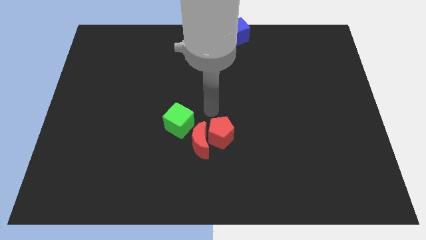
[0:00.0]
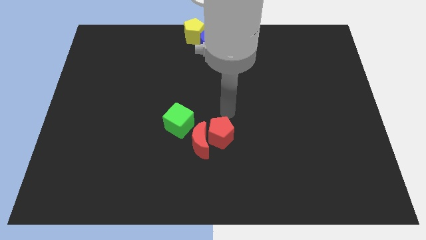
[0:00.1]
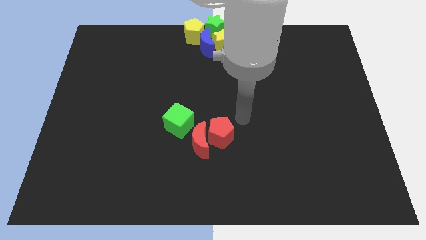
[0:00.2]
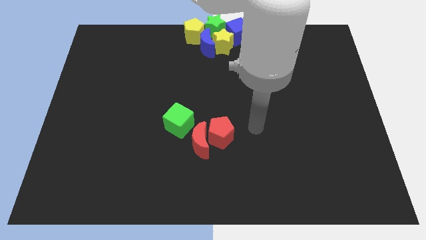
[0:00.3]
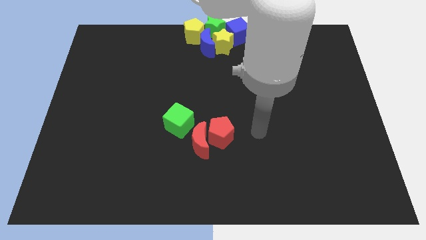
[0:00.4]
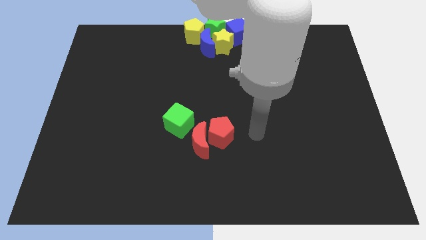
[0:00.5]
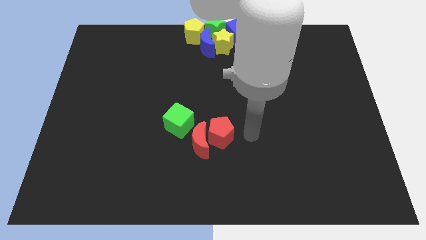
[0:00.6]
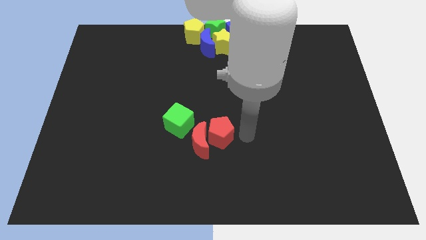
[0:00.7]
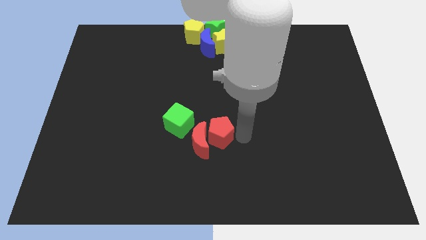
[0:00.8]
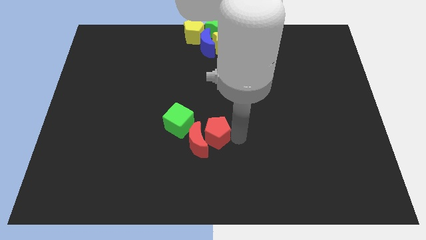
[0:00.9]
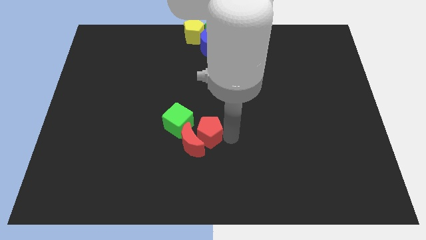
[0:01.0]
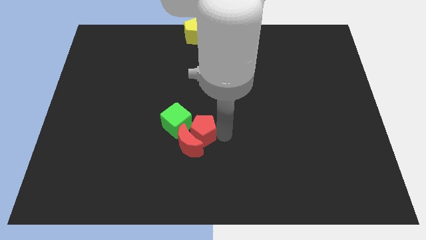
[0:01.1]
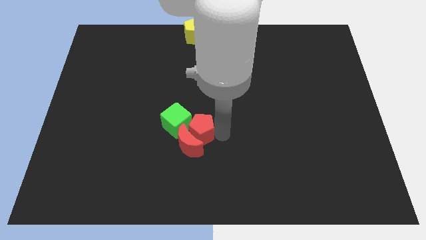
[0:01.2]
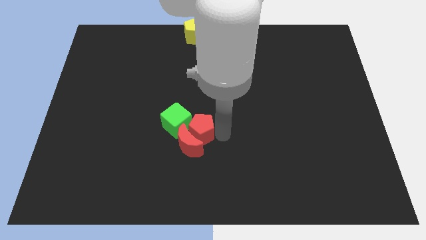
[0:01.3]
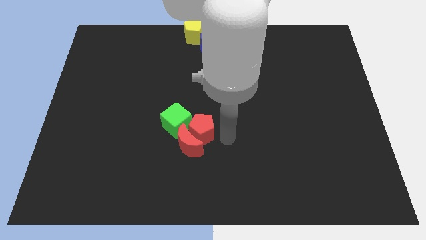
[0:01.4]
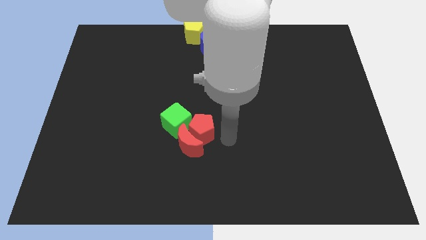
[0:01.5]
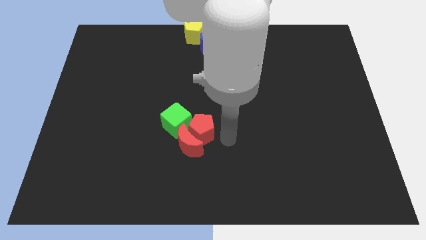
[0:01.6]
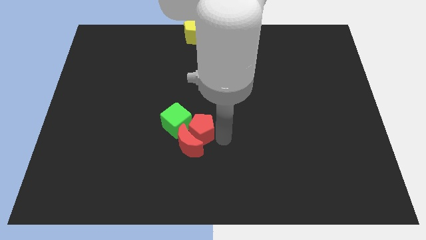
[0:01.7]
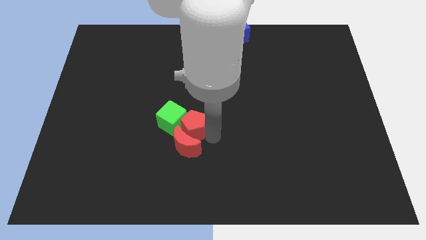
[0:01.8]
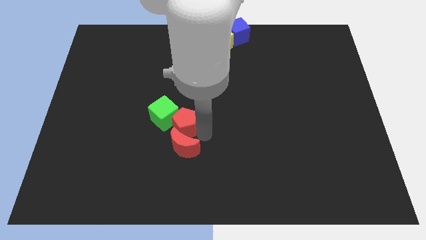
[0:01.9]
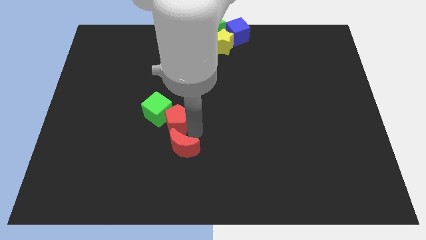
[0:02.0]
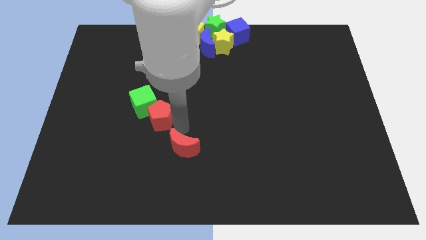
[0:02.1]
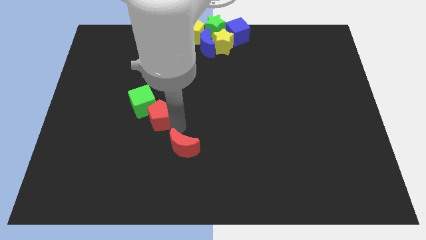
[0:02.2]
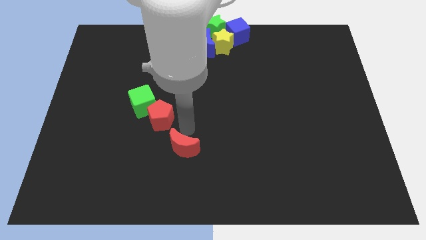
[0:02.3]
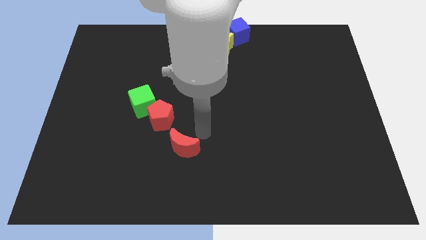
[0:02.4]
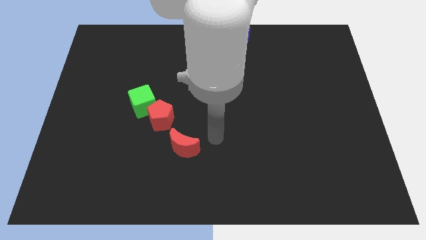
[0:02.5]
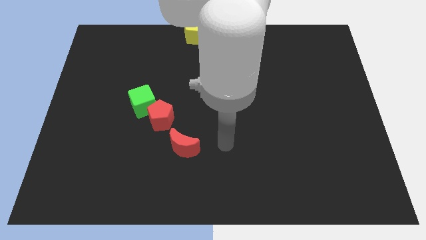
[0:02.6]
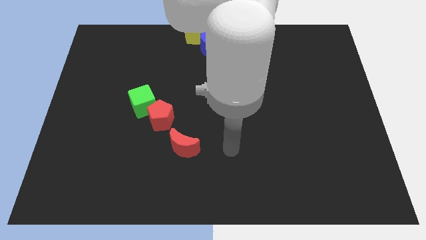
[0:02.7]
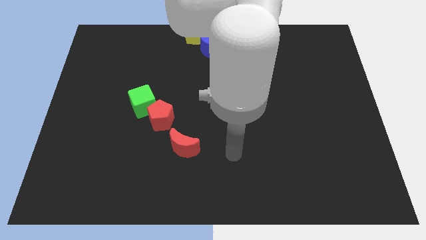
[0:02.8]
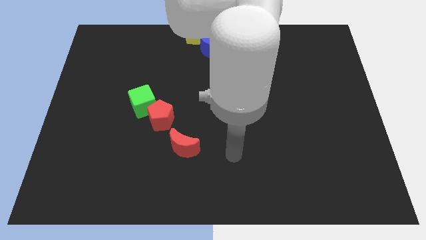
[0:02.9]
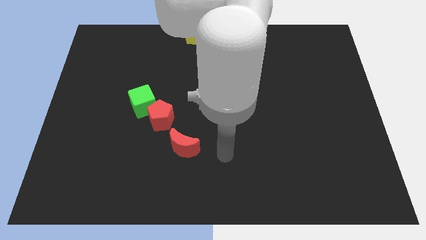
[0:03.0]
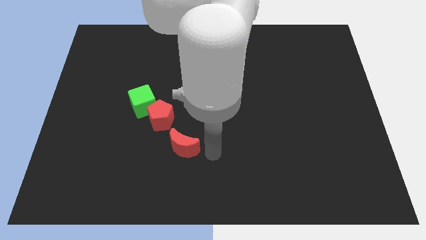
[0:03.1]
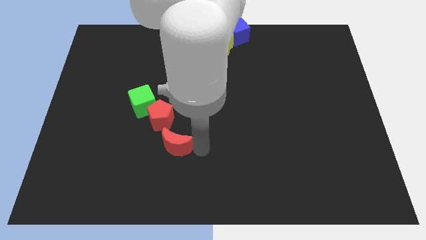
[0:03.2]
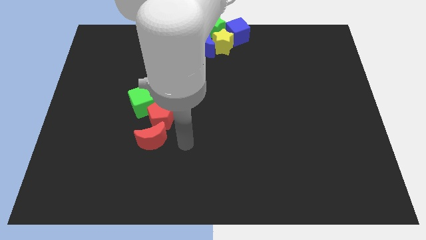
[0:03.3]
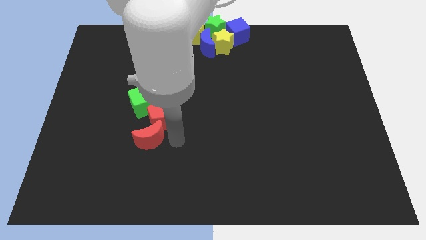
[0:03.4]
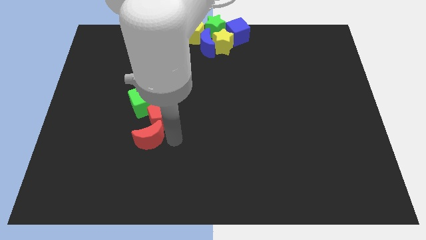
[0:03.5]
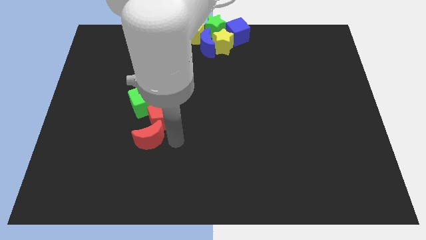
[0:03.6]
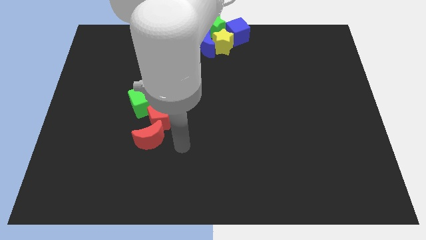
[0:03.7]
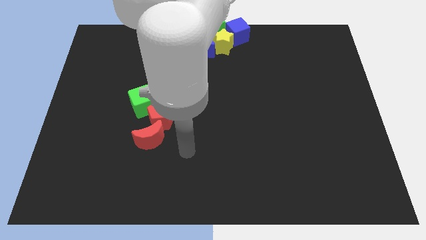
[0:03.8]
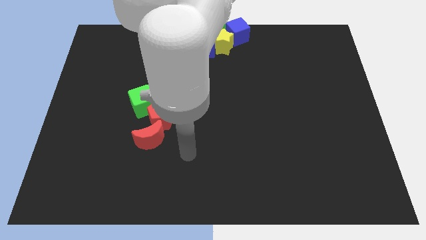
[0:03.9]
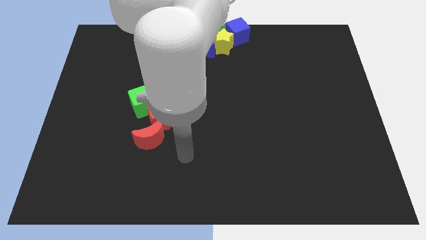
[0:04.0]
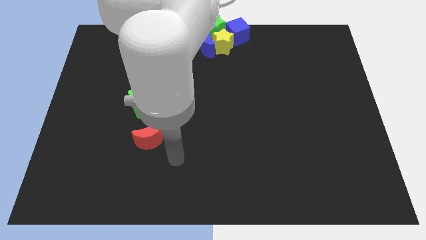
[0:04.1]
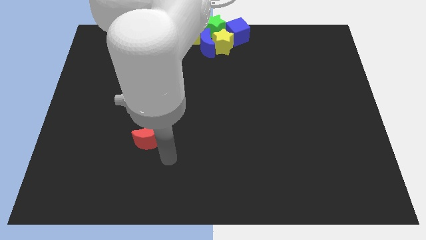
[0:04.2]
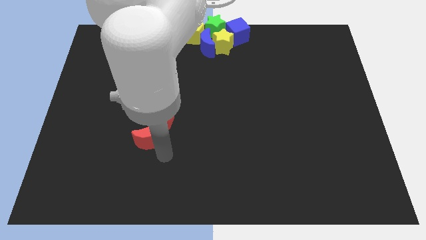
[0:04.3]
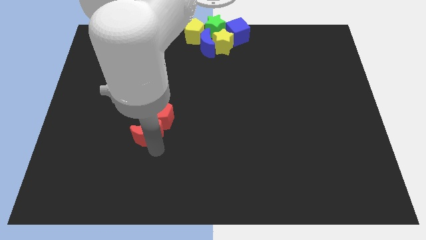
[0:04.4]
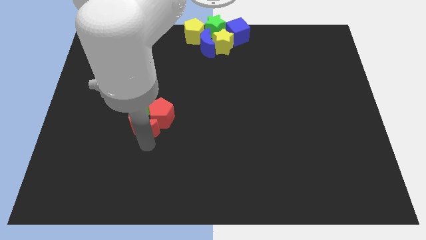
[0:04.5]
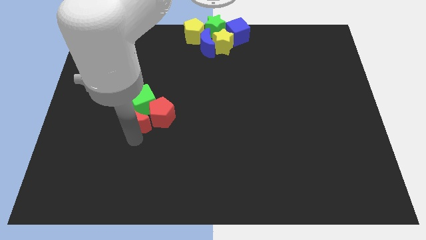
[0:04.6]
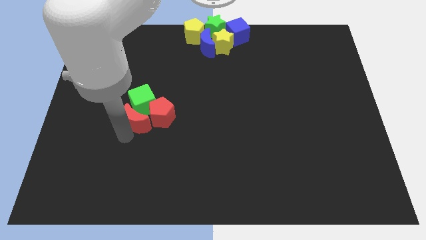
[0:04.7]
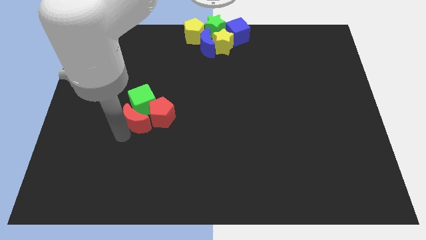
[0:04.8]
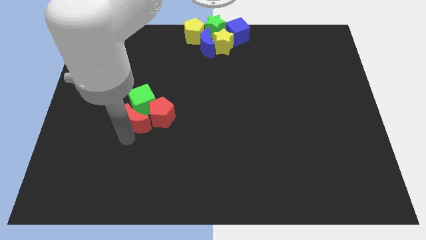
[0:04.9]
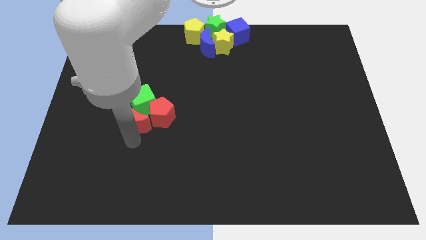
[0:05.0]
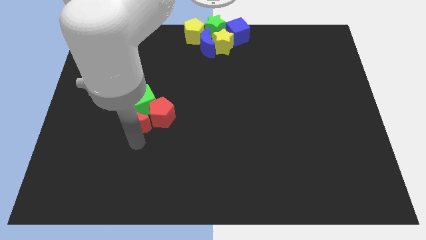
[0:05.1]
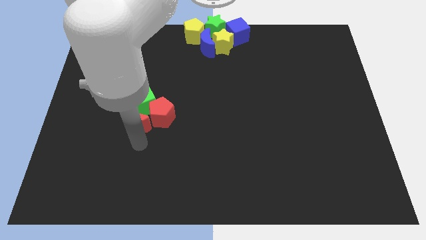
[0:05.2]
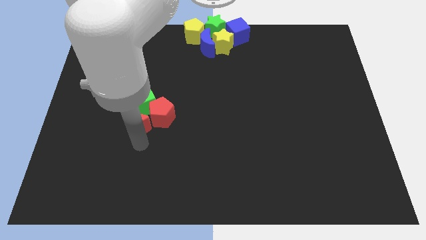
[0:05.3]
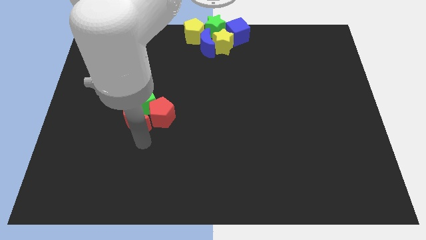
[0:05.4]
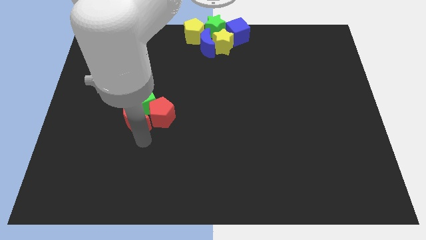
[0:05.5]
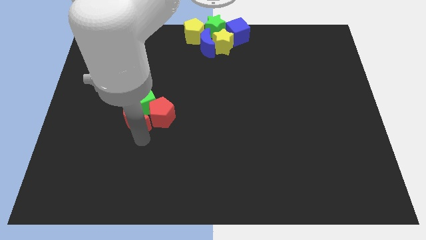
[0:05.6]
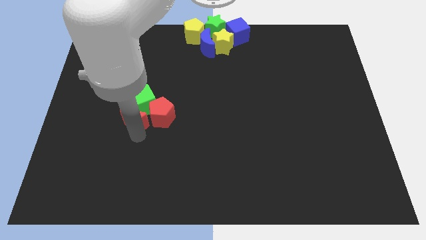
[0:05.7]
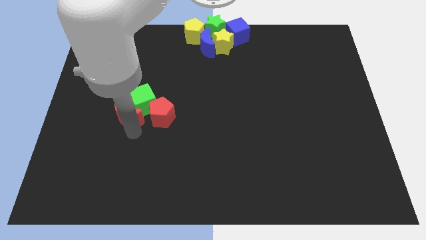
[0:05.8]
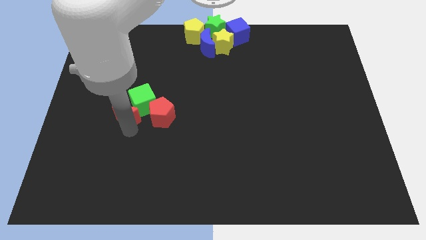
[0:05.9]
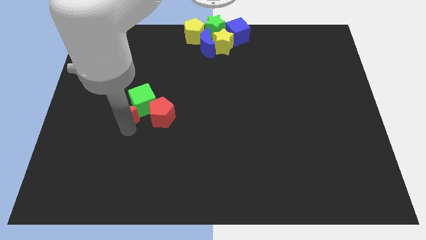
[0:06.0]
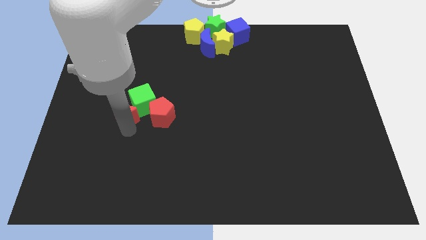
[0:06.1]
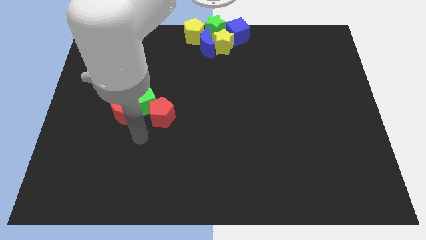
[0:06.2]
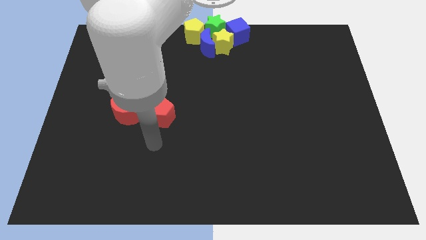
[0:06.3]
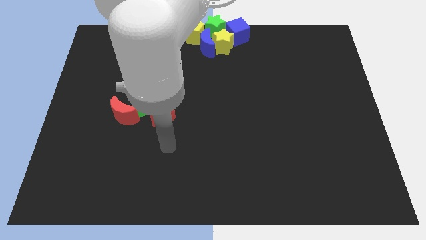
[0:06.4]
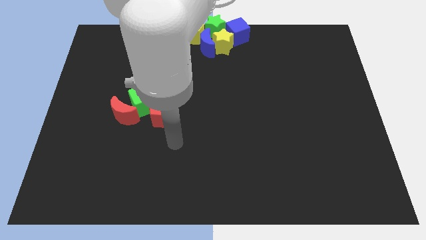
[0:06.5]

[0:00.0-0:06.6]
move the red crescent left to the green cube

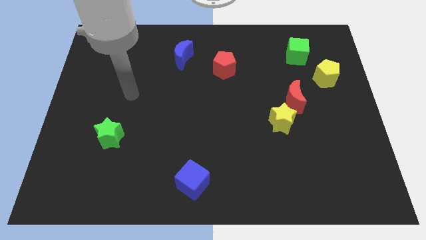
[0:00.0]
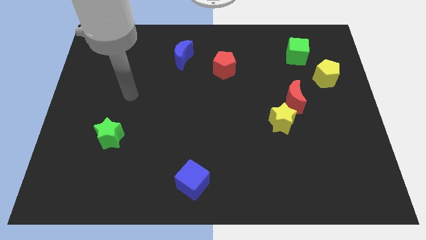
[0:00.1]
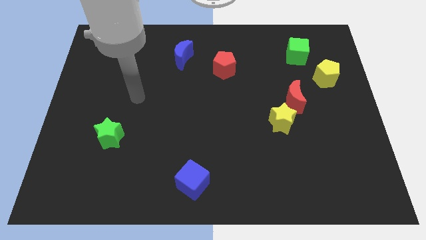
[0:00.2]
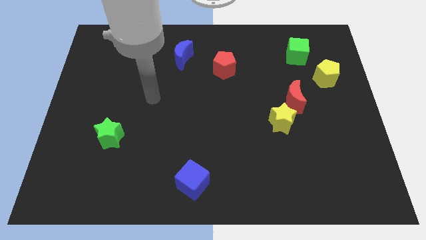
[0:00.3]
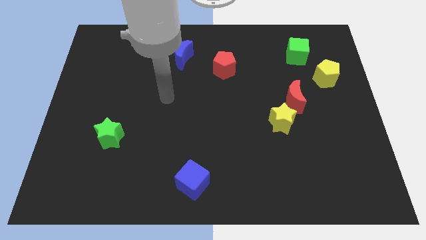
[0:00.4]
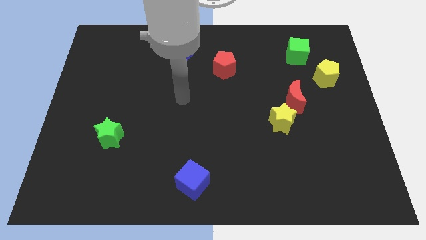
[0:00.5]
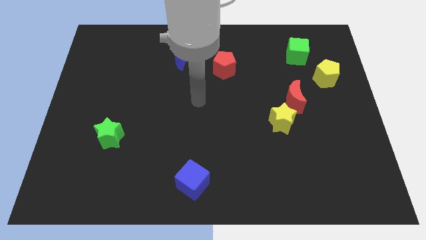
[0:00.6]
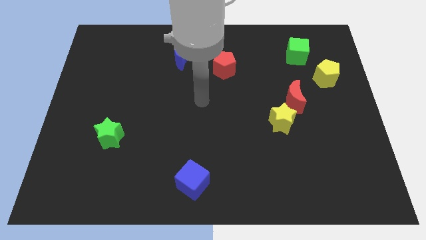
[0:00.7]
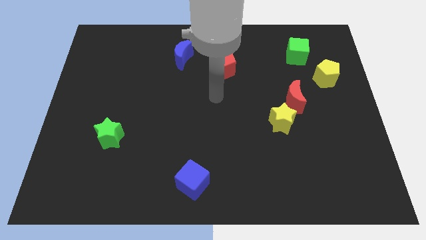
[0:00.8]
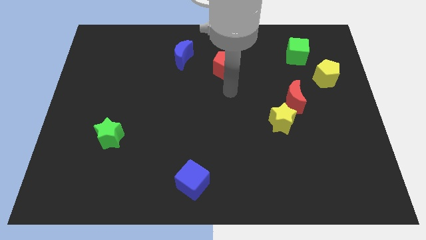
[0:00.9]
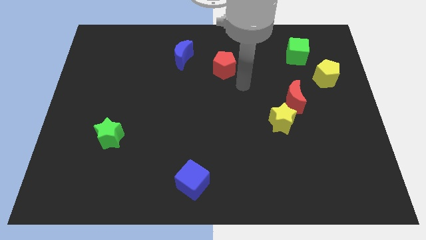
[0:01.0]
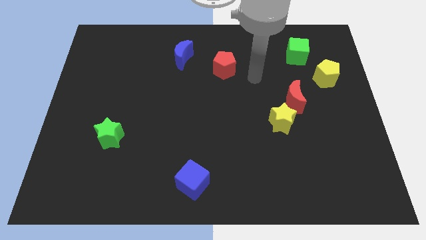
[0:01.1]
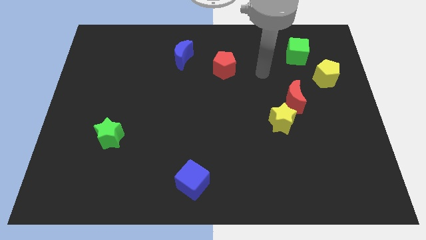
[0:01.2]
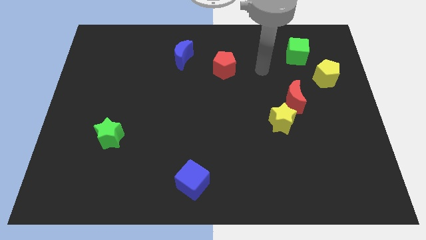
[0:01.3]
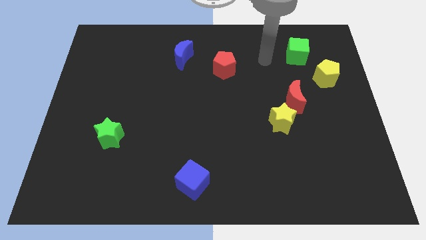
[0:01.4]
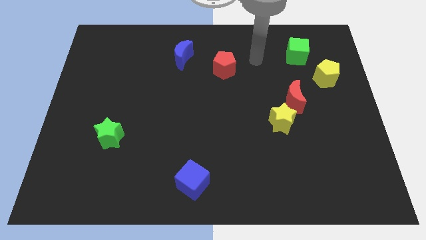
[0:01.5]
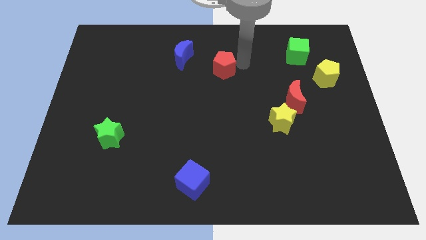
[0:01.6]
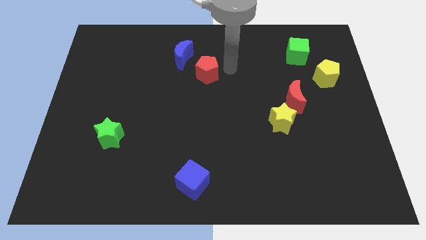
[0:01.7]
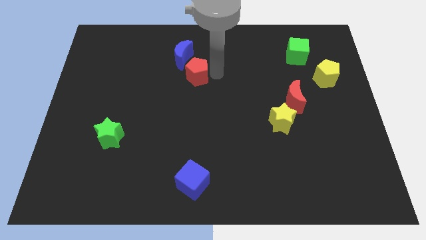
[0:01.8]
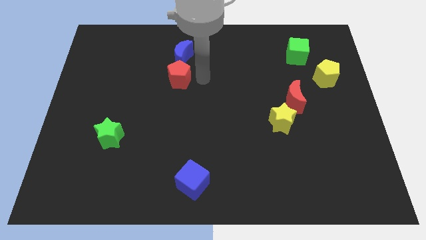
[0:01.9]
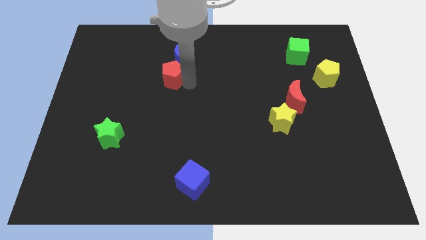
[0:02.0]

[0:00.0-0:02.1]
move red pentagon close to the blue moon

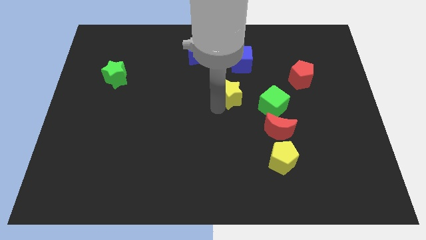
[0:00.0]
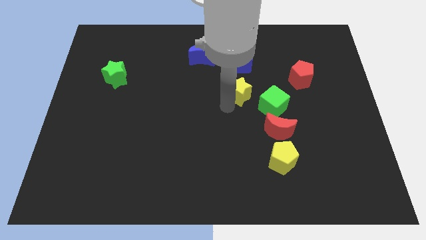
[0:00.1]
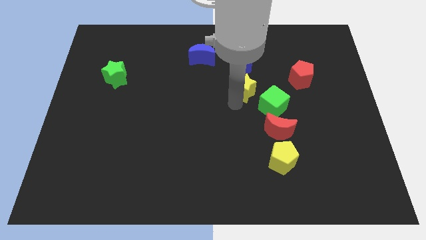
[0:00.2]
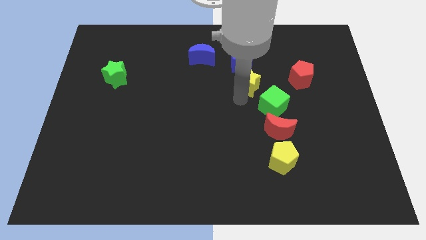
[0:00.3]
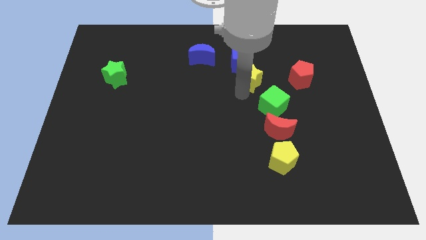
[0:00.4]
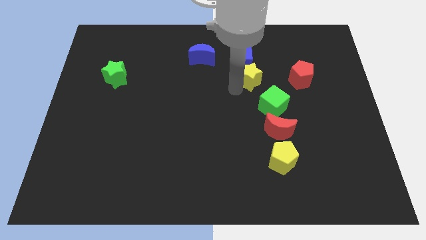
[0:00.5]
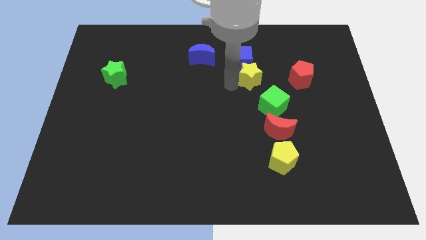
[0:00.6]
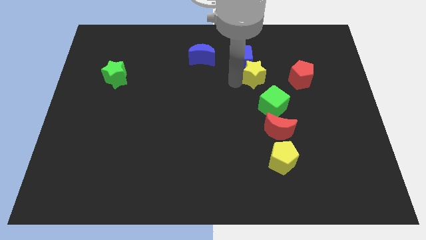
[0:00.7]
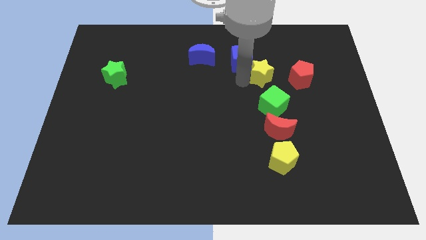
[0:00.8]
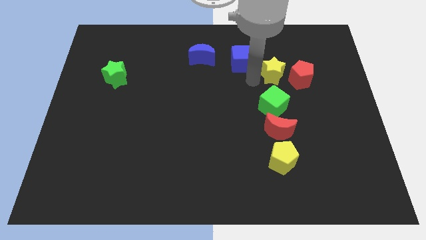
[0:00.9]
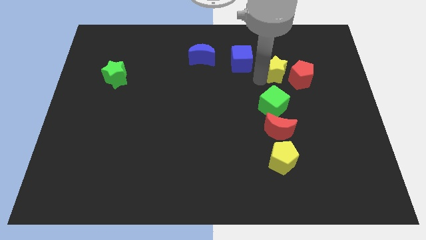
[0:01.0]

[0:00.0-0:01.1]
move yellow star to the left of red pentagon
